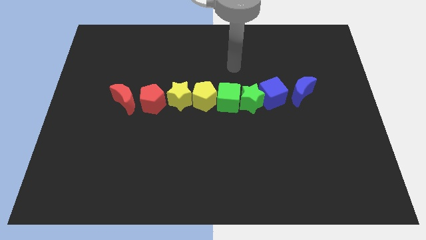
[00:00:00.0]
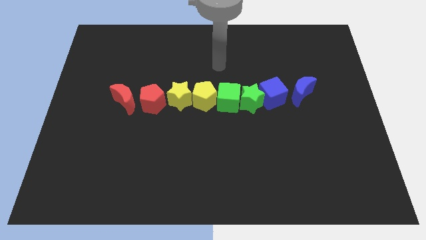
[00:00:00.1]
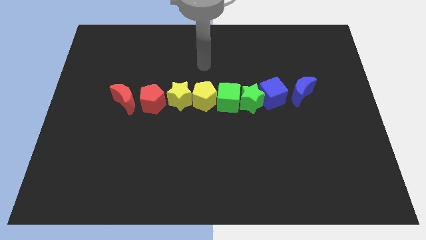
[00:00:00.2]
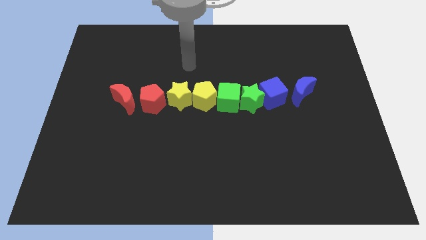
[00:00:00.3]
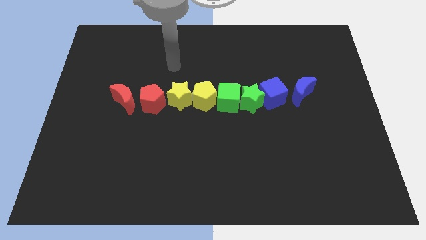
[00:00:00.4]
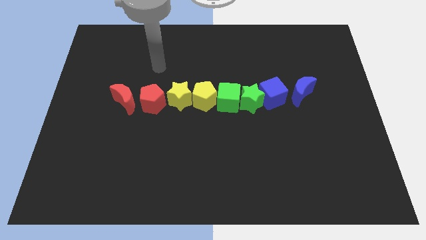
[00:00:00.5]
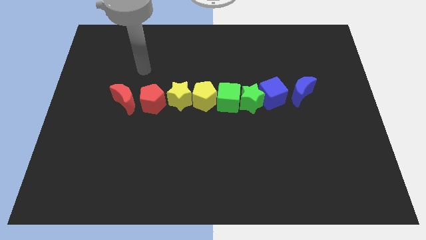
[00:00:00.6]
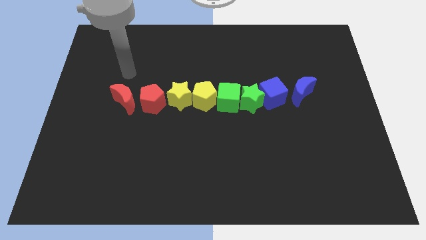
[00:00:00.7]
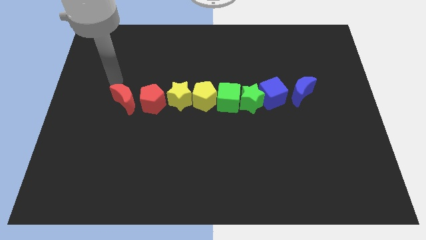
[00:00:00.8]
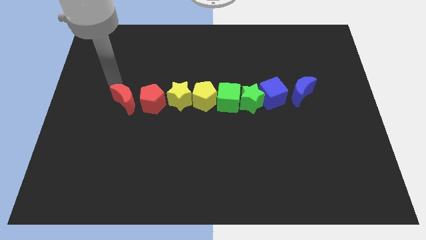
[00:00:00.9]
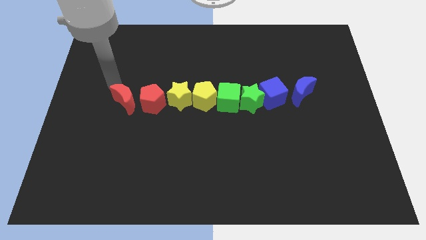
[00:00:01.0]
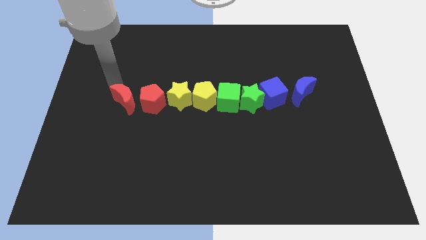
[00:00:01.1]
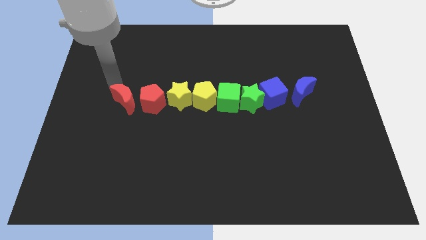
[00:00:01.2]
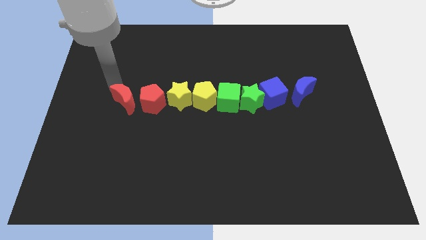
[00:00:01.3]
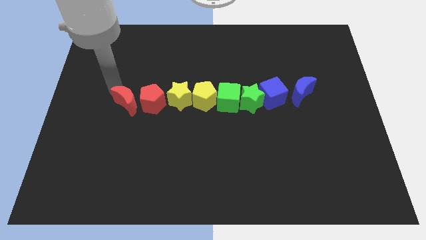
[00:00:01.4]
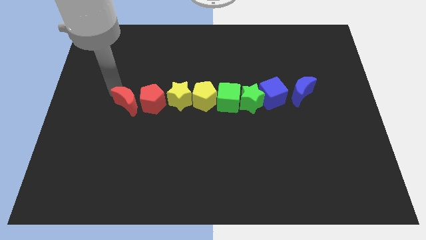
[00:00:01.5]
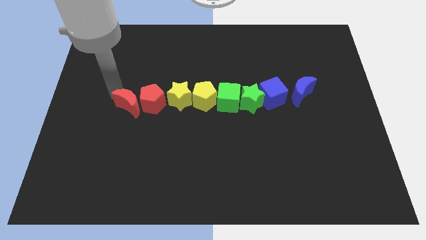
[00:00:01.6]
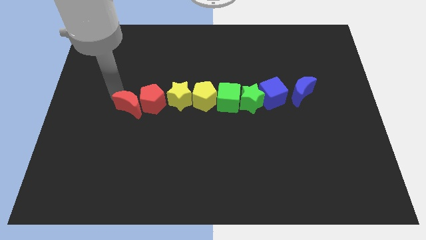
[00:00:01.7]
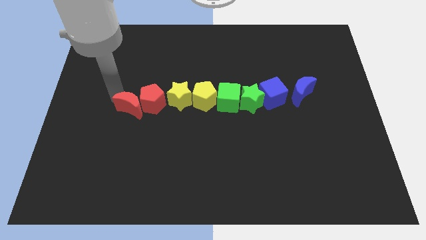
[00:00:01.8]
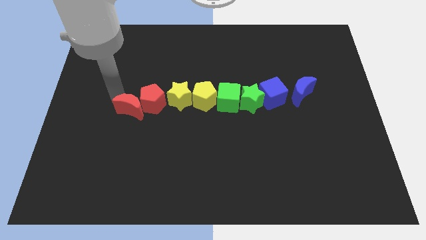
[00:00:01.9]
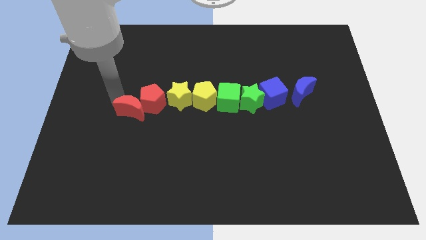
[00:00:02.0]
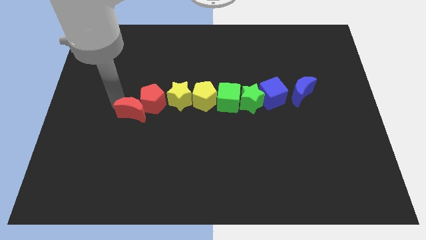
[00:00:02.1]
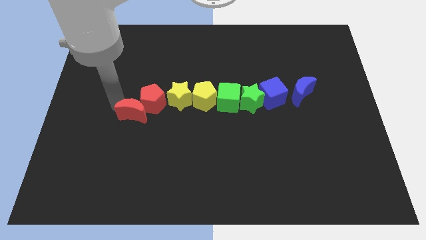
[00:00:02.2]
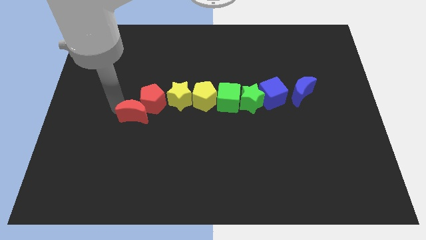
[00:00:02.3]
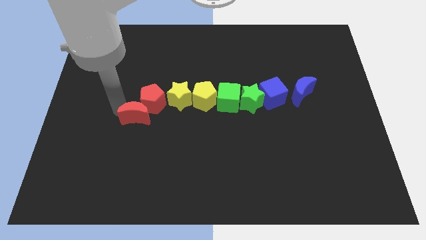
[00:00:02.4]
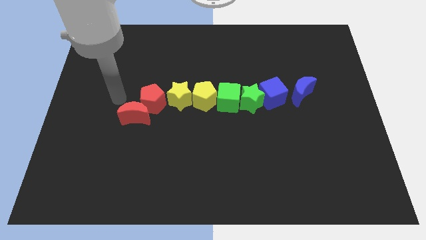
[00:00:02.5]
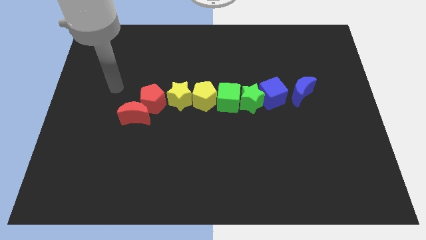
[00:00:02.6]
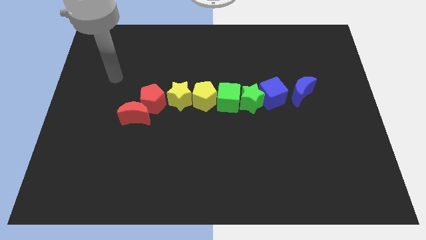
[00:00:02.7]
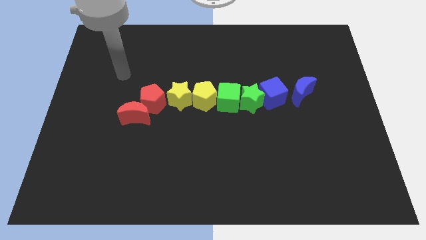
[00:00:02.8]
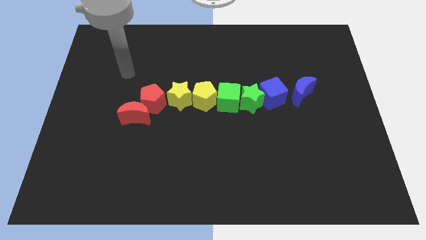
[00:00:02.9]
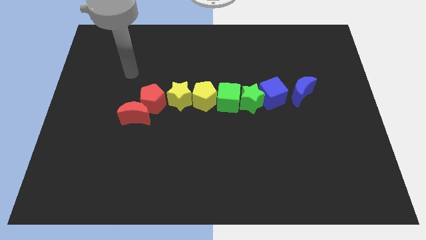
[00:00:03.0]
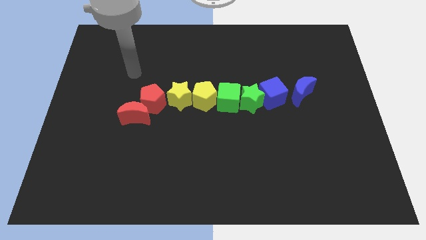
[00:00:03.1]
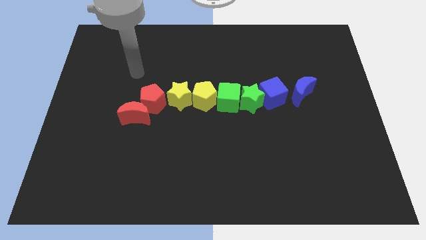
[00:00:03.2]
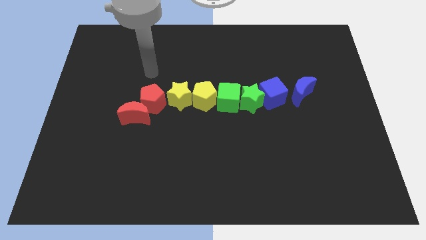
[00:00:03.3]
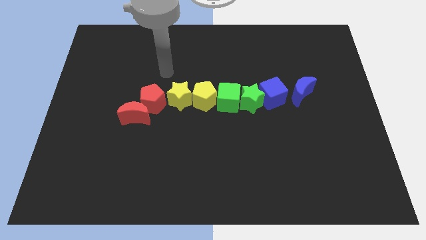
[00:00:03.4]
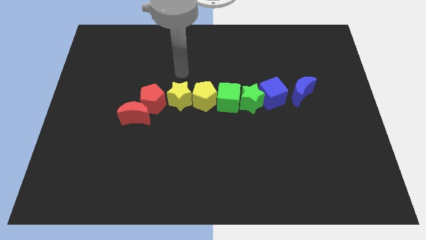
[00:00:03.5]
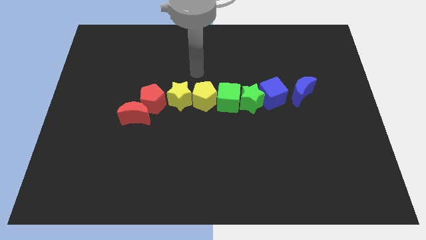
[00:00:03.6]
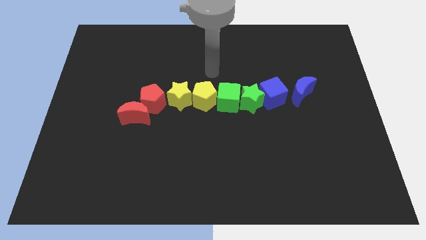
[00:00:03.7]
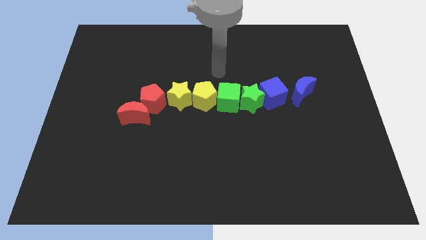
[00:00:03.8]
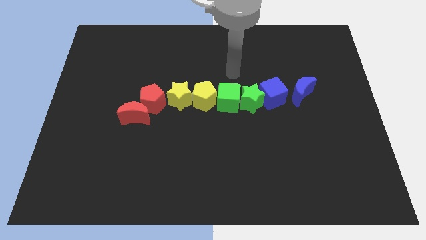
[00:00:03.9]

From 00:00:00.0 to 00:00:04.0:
place the red crescent to the left of the red pentagon

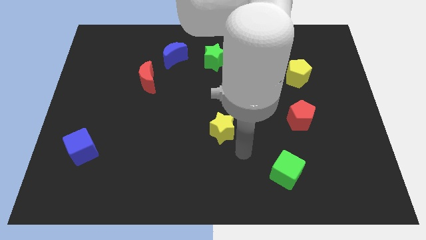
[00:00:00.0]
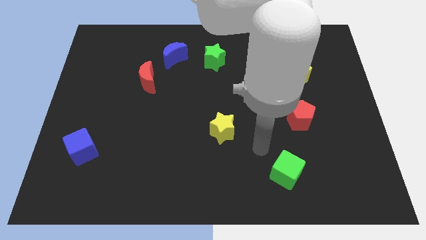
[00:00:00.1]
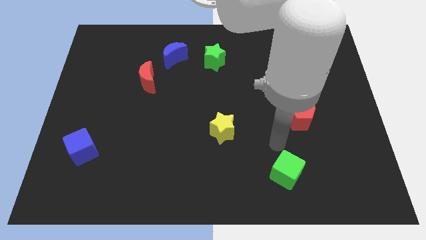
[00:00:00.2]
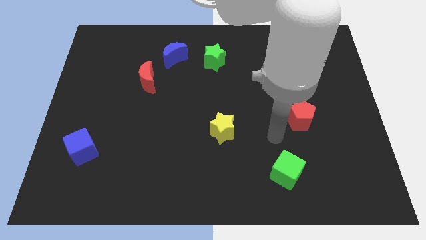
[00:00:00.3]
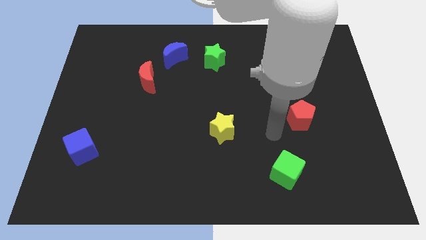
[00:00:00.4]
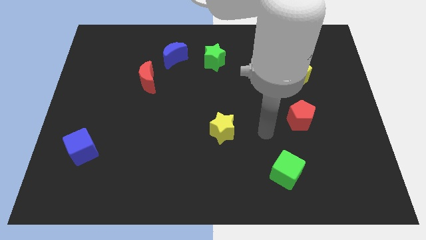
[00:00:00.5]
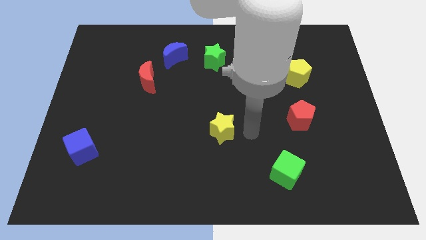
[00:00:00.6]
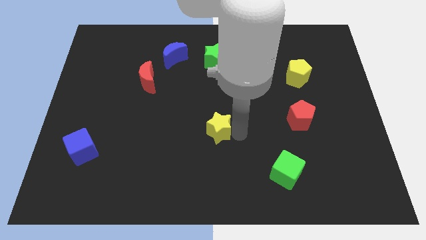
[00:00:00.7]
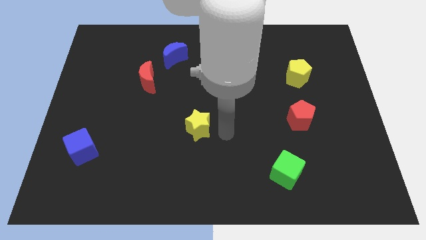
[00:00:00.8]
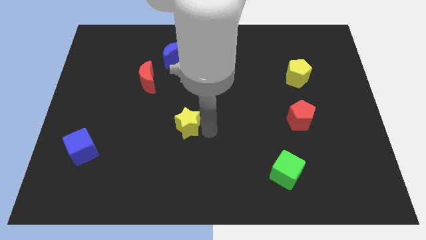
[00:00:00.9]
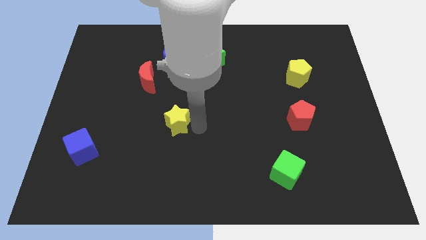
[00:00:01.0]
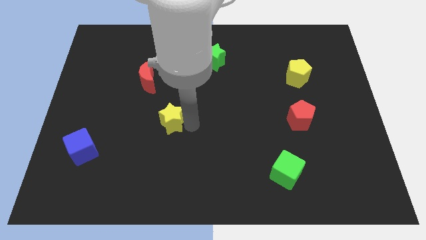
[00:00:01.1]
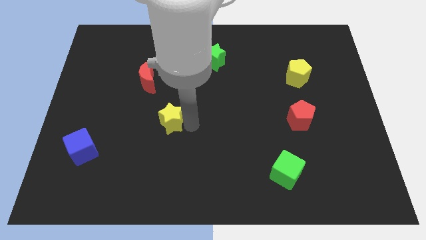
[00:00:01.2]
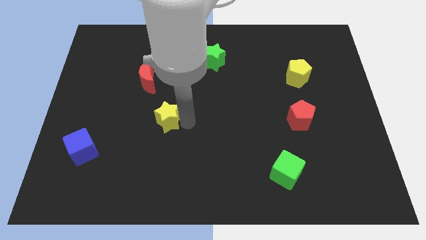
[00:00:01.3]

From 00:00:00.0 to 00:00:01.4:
drag the yellow star diagonally on the bottom right side of the red crescent

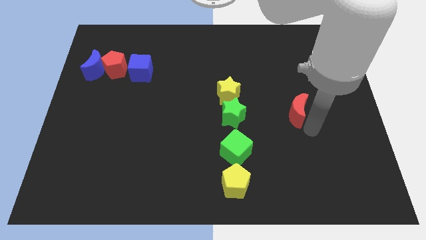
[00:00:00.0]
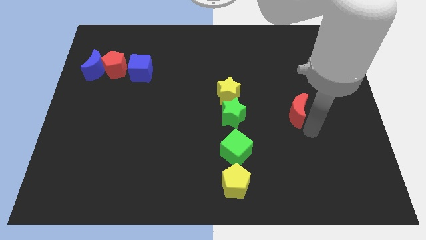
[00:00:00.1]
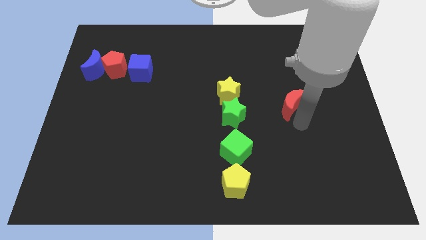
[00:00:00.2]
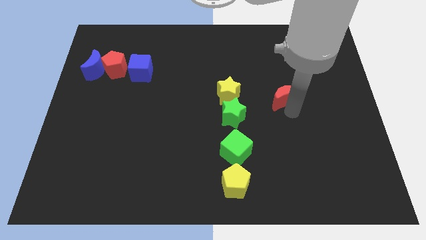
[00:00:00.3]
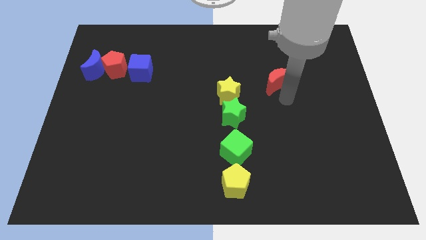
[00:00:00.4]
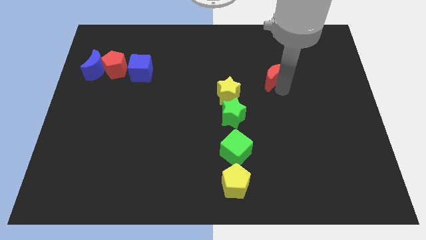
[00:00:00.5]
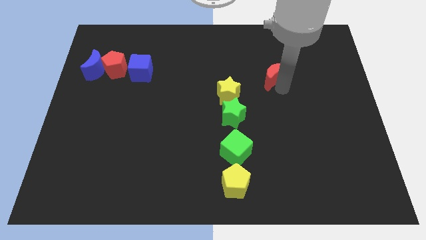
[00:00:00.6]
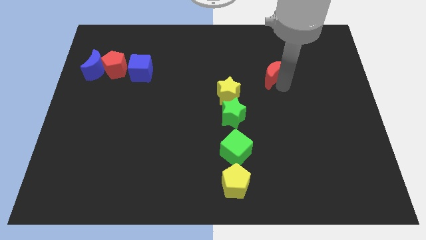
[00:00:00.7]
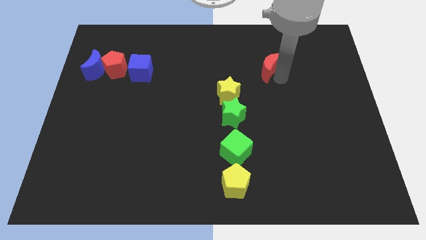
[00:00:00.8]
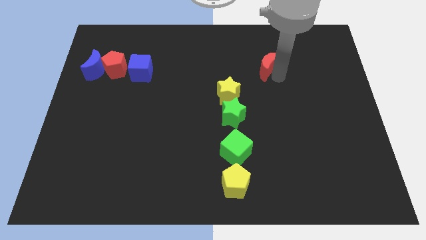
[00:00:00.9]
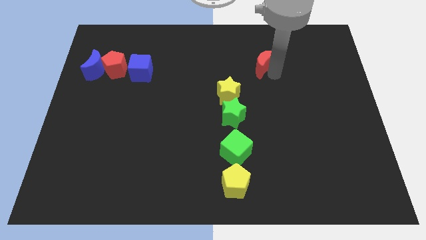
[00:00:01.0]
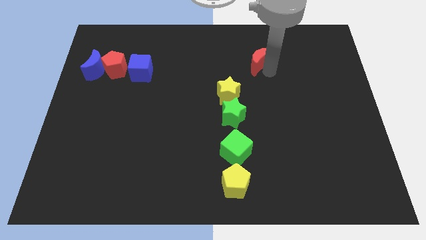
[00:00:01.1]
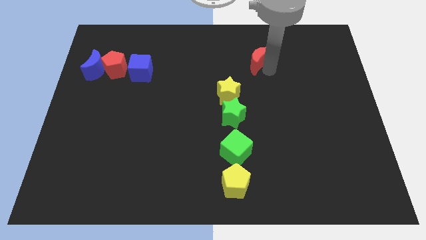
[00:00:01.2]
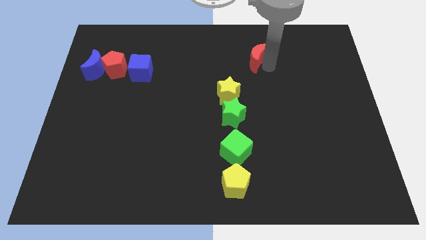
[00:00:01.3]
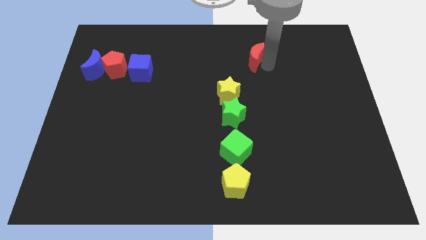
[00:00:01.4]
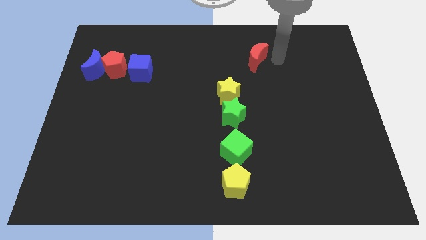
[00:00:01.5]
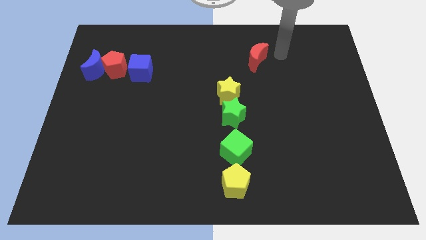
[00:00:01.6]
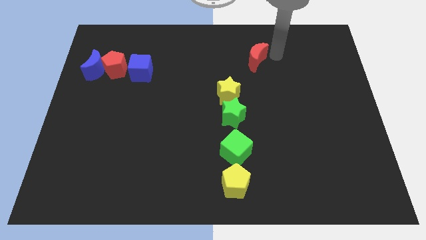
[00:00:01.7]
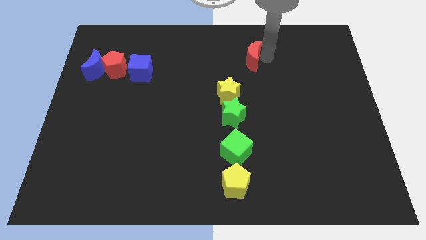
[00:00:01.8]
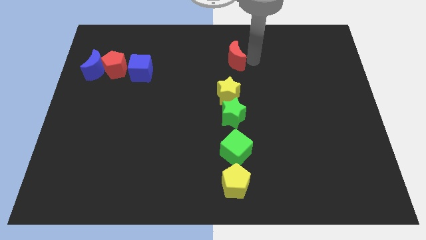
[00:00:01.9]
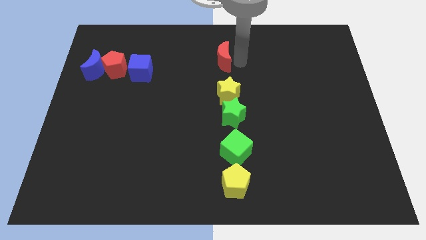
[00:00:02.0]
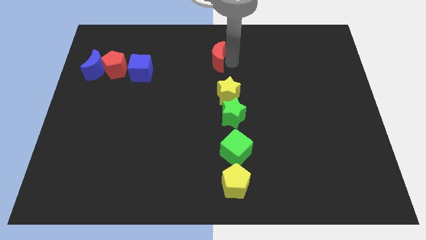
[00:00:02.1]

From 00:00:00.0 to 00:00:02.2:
place the red moon on top of the yellow star

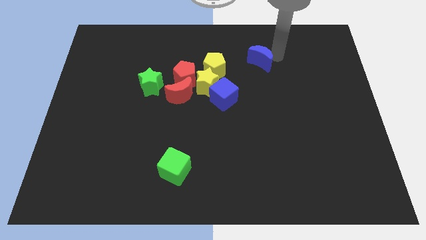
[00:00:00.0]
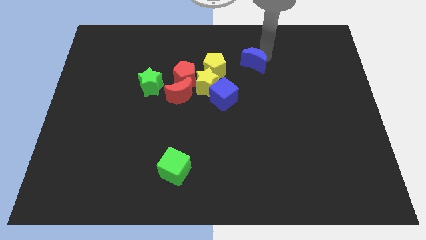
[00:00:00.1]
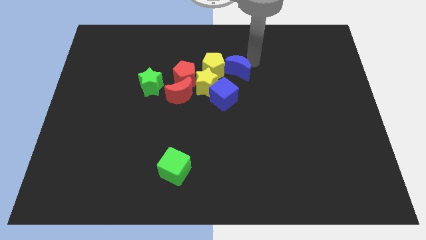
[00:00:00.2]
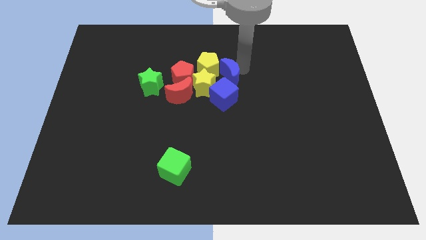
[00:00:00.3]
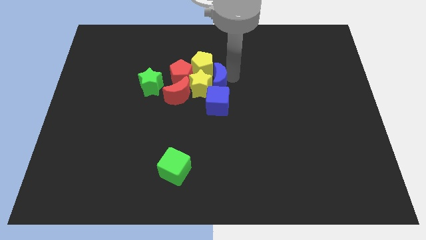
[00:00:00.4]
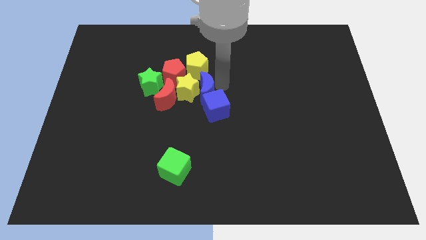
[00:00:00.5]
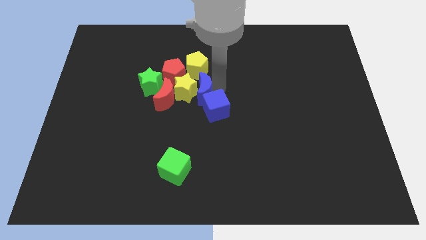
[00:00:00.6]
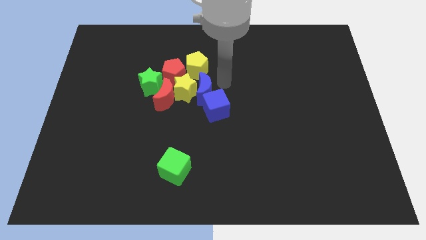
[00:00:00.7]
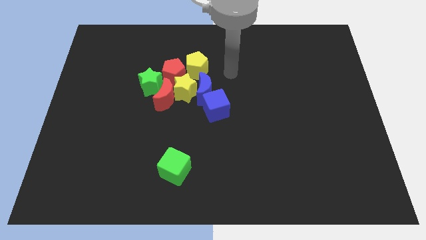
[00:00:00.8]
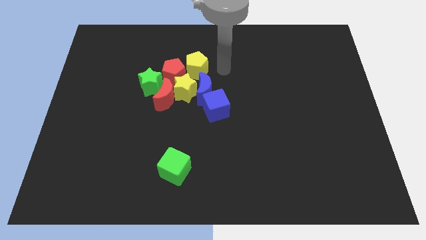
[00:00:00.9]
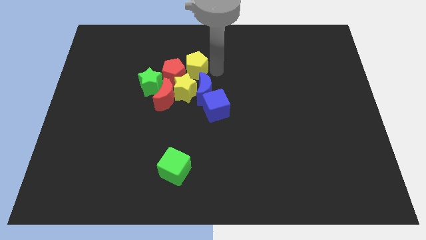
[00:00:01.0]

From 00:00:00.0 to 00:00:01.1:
move the blue crescent to the bottom of the yellow pentagon

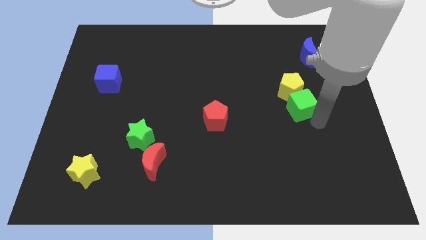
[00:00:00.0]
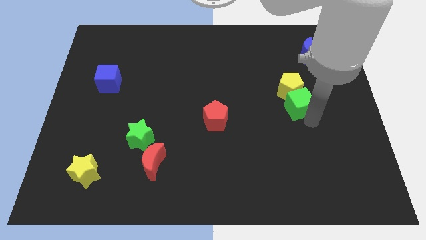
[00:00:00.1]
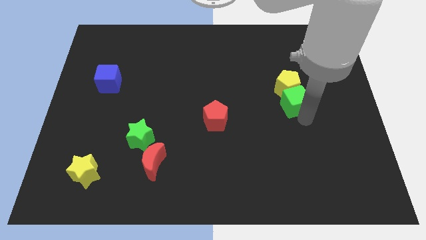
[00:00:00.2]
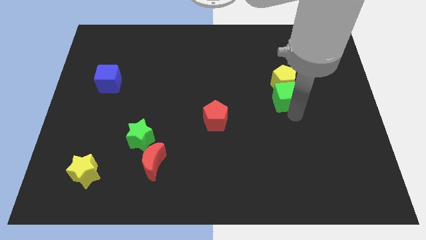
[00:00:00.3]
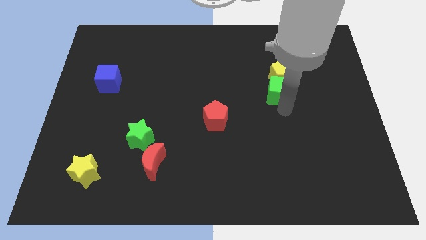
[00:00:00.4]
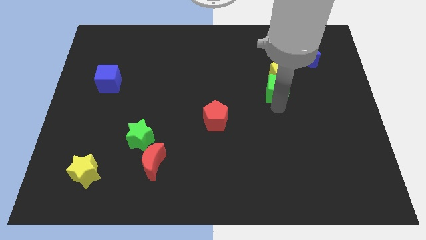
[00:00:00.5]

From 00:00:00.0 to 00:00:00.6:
push the green cube into the yellow pentagon
